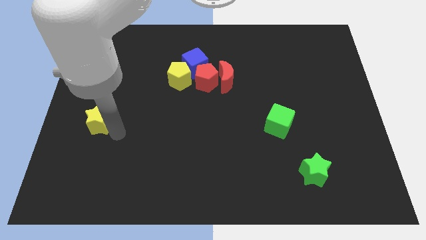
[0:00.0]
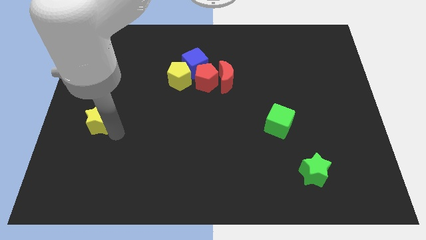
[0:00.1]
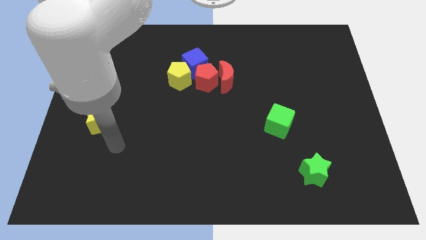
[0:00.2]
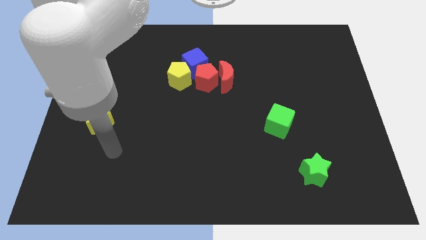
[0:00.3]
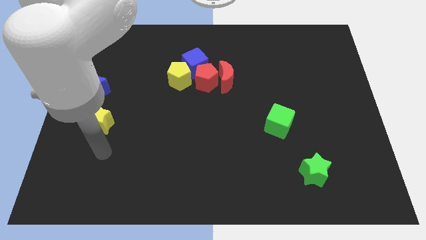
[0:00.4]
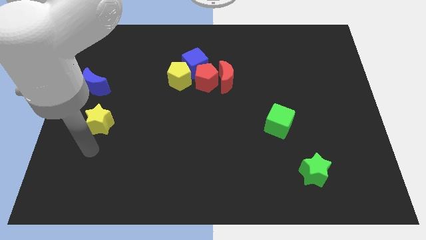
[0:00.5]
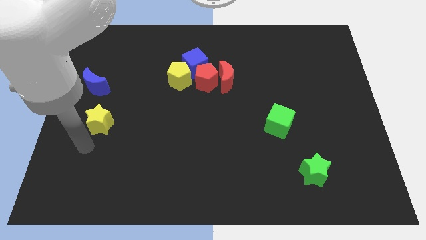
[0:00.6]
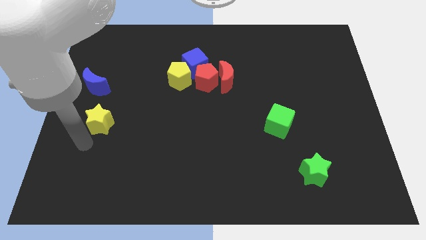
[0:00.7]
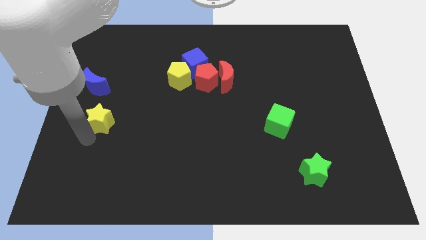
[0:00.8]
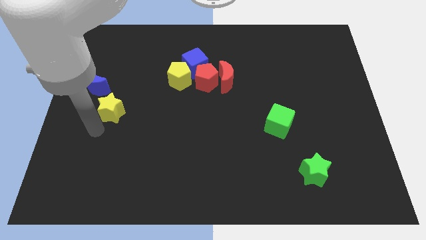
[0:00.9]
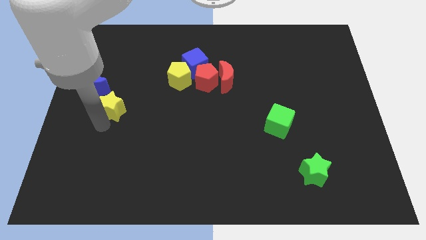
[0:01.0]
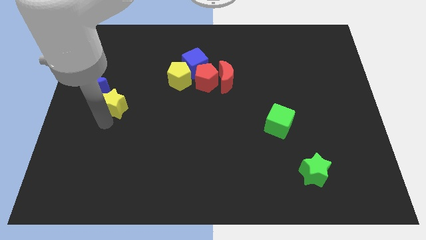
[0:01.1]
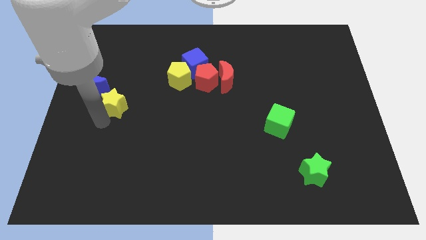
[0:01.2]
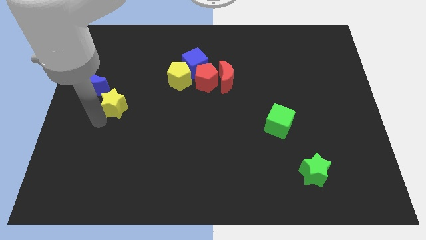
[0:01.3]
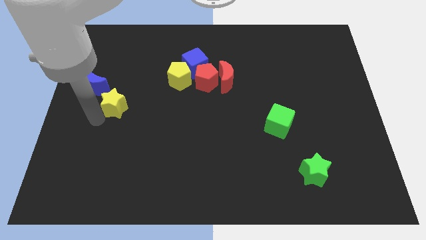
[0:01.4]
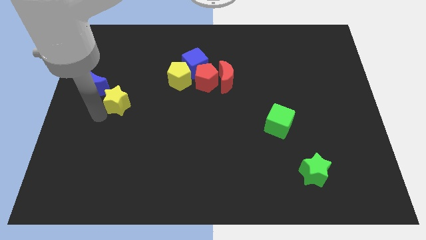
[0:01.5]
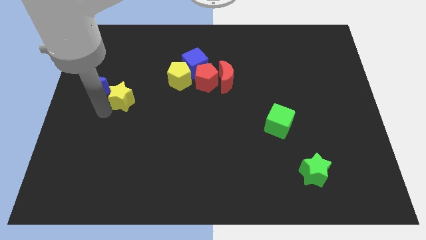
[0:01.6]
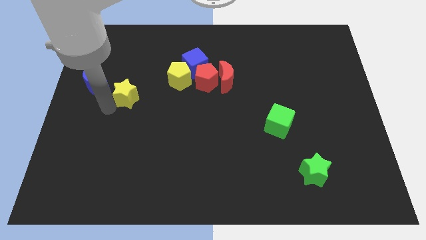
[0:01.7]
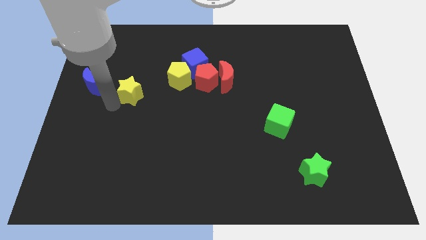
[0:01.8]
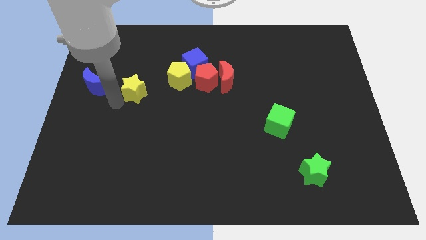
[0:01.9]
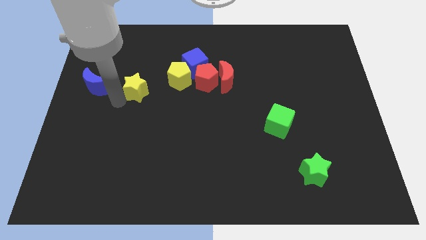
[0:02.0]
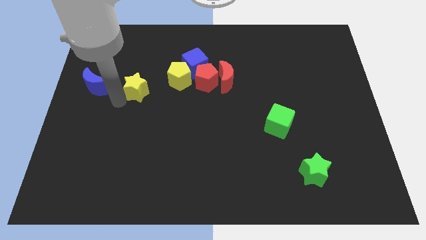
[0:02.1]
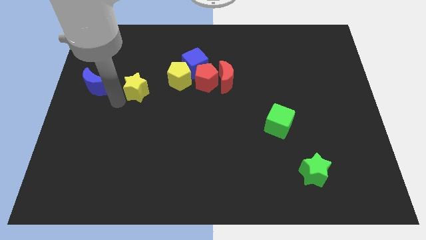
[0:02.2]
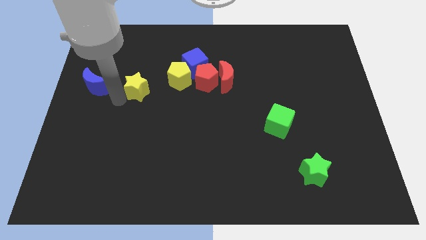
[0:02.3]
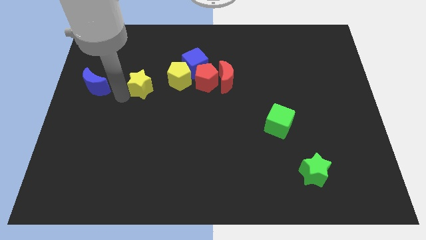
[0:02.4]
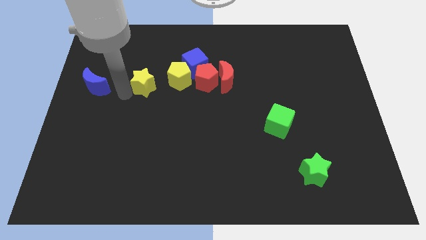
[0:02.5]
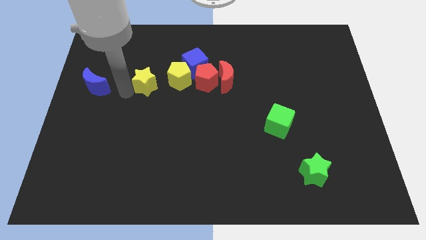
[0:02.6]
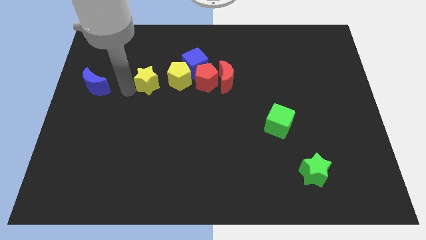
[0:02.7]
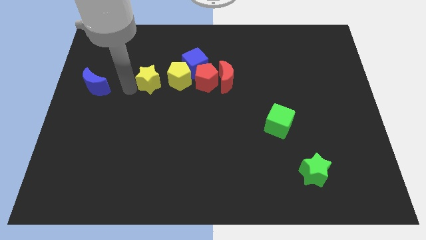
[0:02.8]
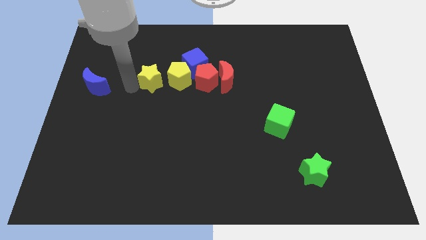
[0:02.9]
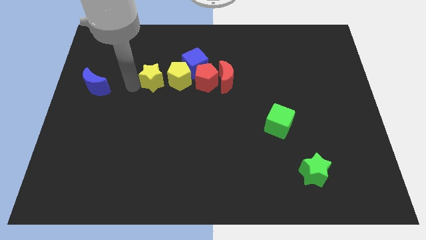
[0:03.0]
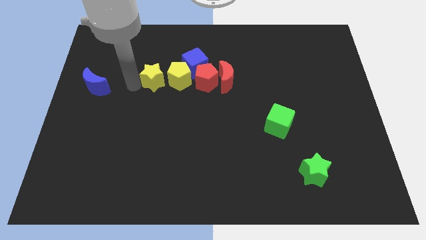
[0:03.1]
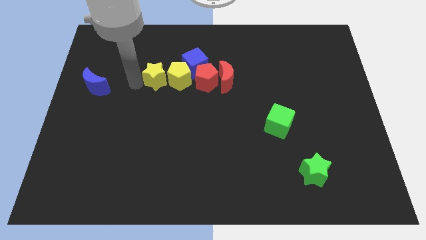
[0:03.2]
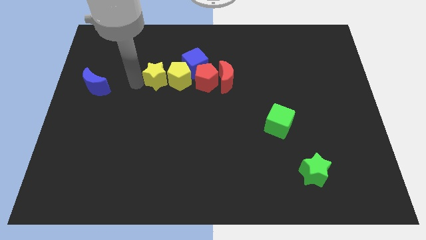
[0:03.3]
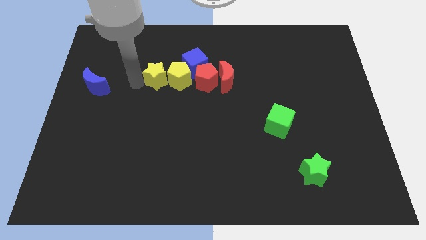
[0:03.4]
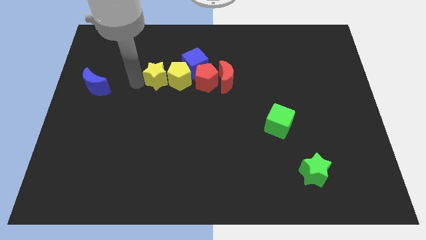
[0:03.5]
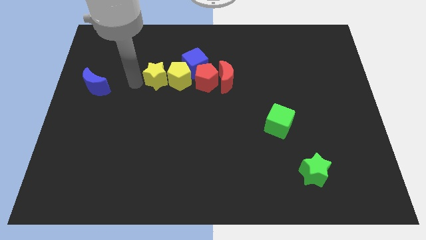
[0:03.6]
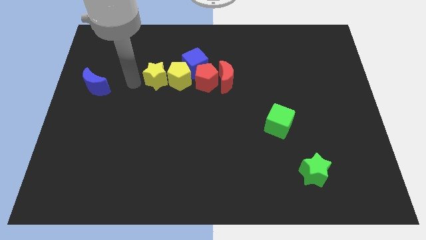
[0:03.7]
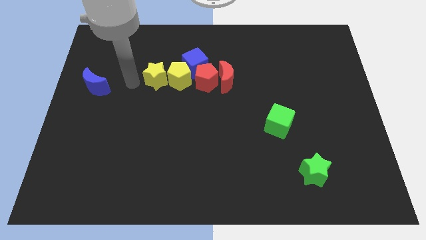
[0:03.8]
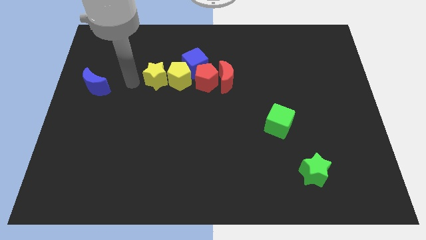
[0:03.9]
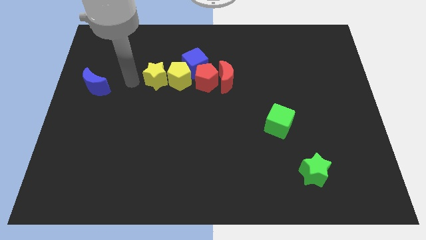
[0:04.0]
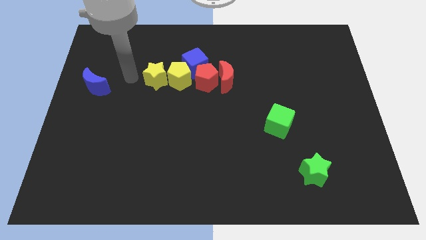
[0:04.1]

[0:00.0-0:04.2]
place the yellow star left to the yellow pentagon to form a horizontal line

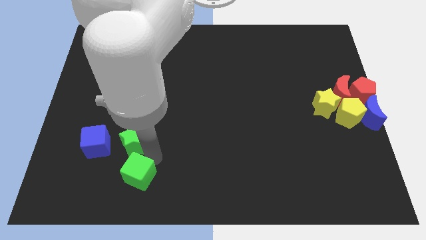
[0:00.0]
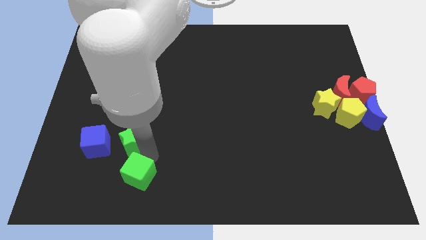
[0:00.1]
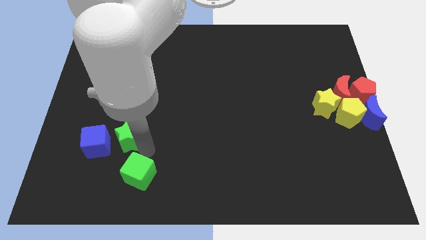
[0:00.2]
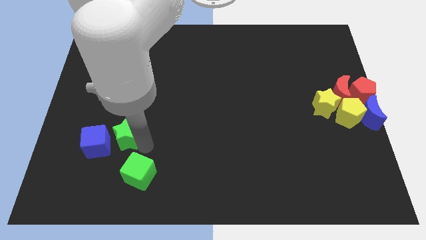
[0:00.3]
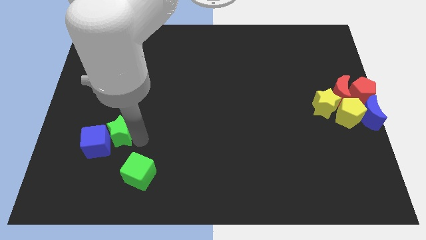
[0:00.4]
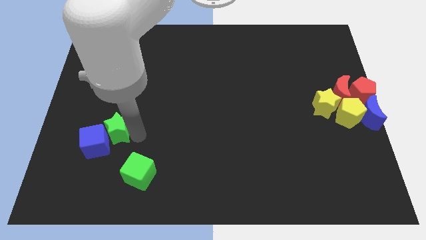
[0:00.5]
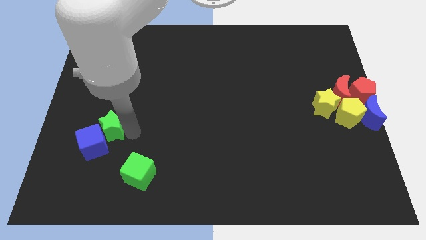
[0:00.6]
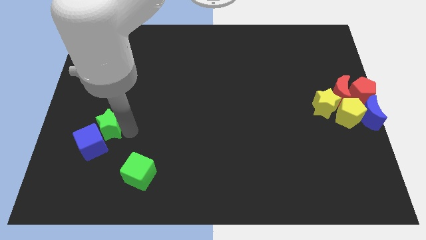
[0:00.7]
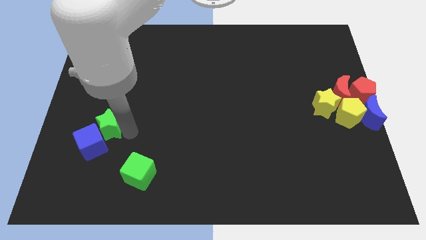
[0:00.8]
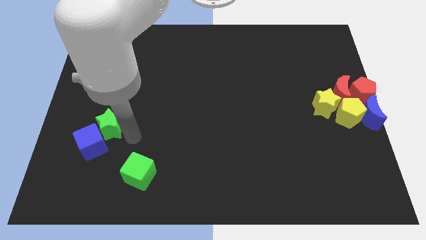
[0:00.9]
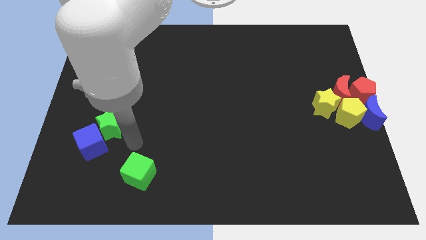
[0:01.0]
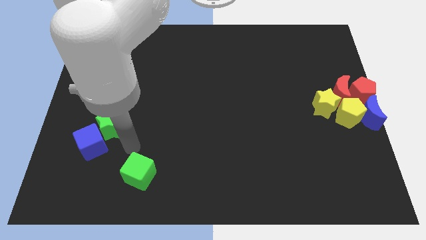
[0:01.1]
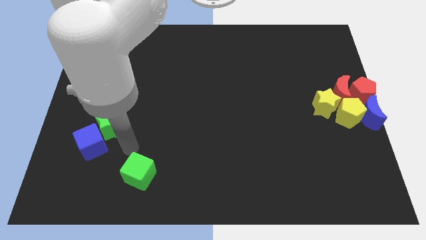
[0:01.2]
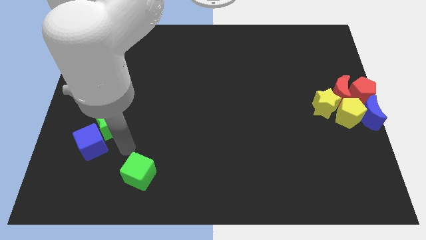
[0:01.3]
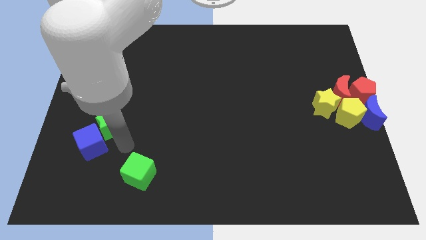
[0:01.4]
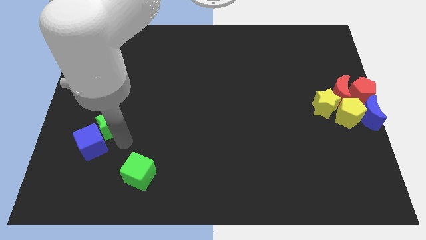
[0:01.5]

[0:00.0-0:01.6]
push the green star near to the blue cube

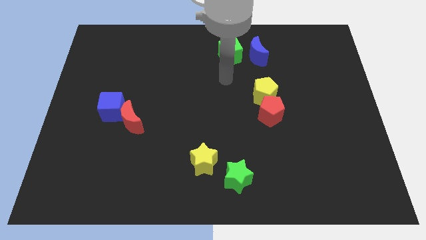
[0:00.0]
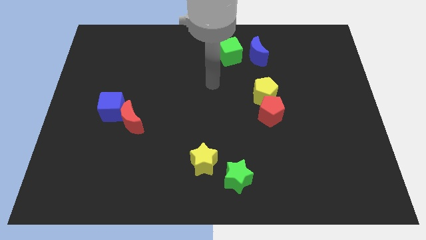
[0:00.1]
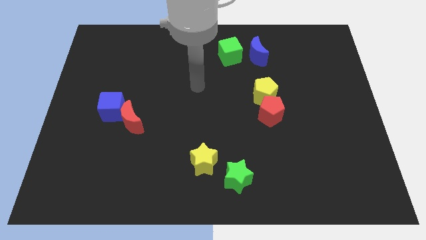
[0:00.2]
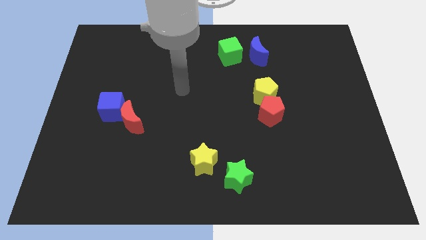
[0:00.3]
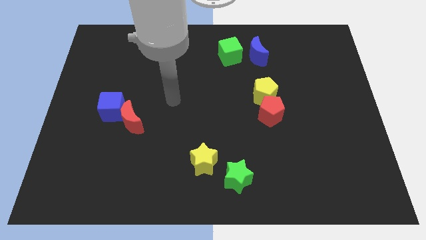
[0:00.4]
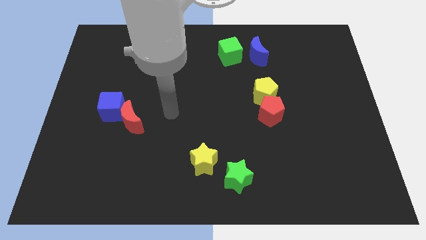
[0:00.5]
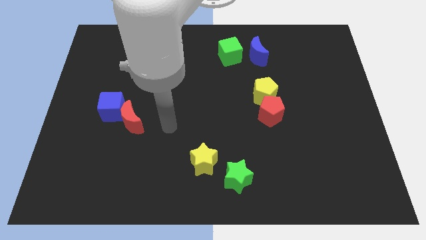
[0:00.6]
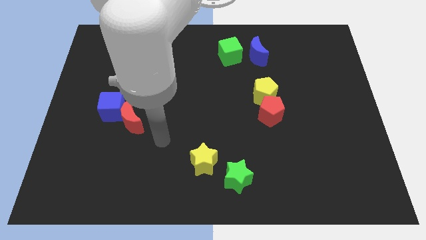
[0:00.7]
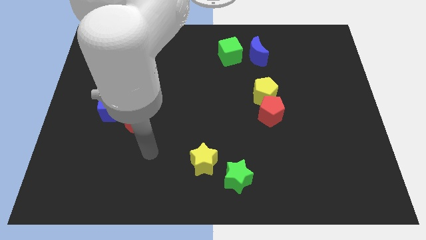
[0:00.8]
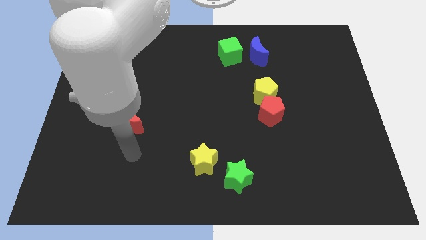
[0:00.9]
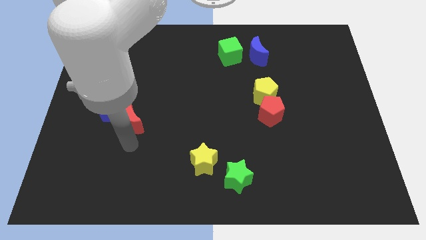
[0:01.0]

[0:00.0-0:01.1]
move your arm away from the green cube

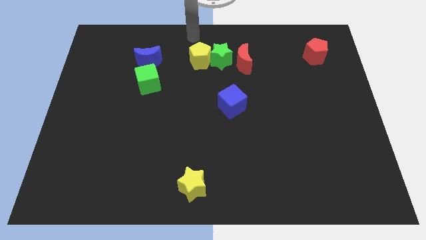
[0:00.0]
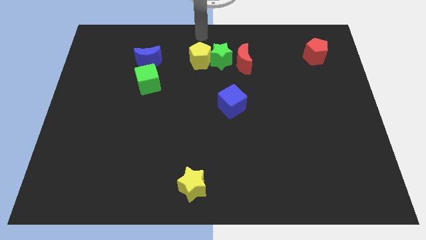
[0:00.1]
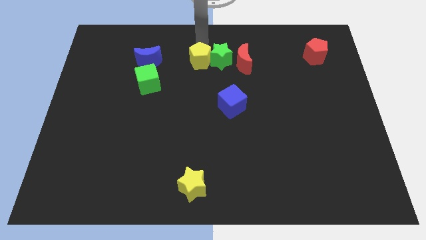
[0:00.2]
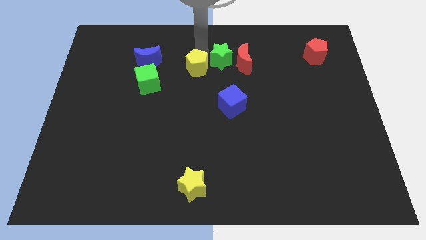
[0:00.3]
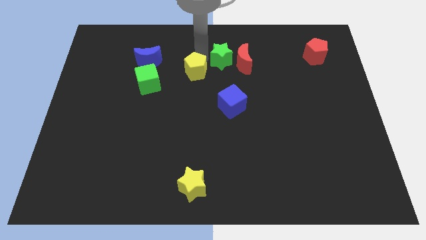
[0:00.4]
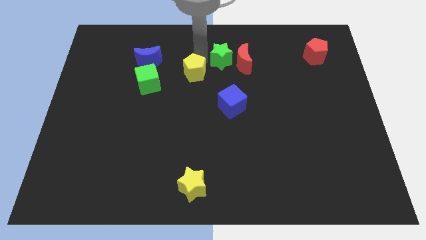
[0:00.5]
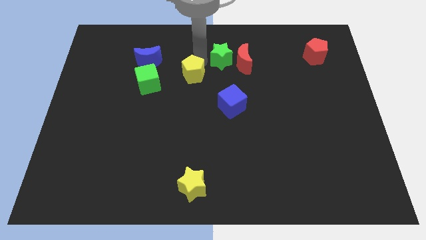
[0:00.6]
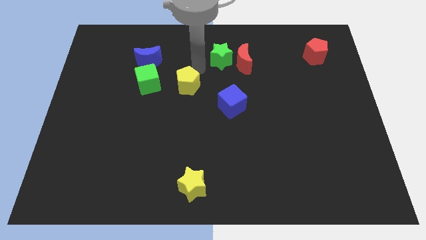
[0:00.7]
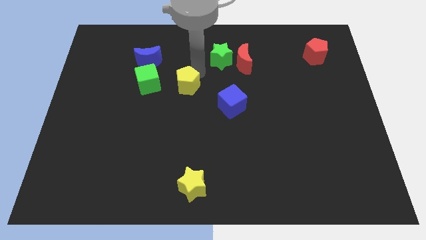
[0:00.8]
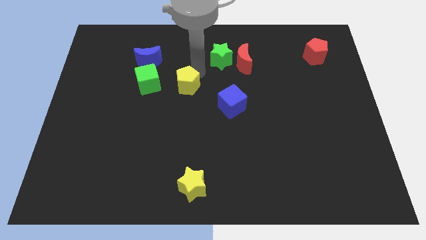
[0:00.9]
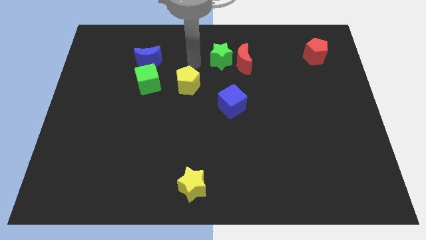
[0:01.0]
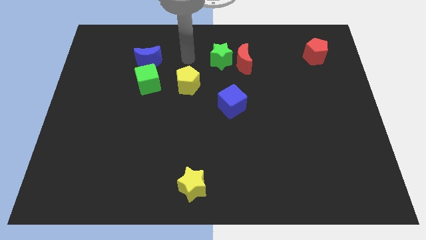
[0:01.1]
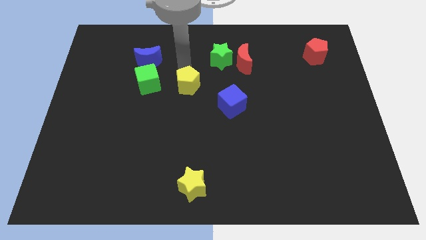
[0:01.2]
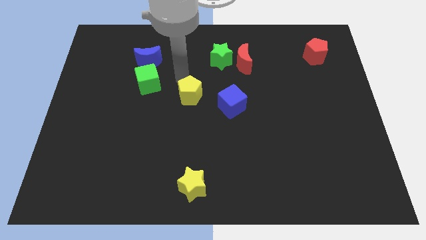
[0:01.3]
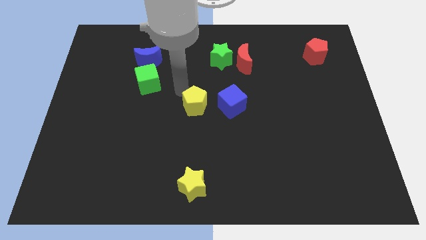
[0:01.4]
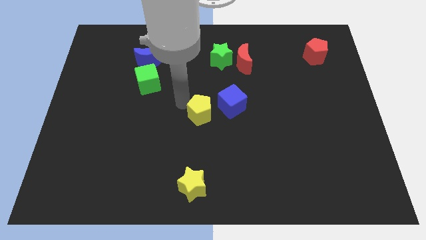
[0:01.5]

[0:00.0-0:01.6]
move yellow pentagon to the left of the blue cube

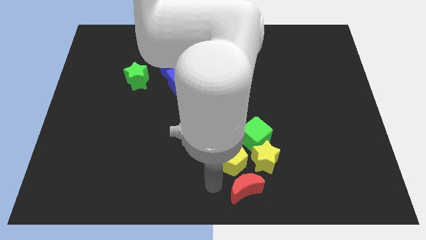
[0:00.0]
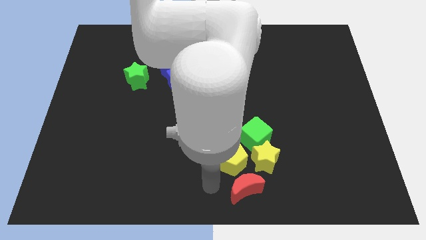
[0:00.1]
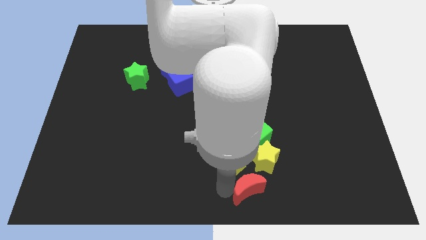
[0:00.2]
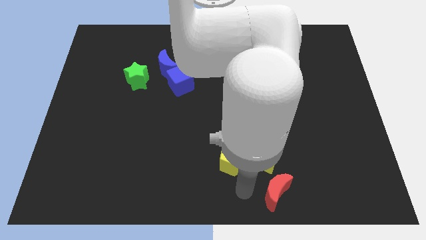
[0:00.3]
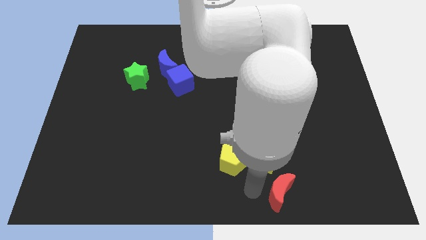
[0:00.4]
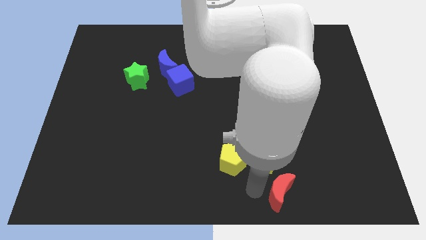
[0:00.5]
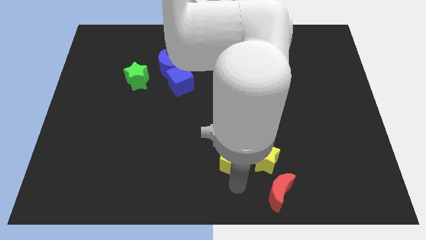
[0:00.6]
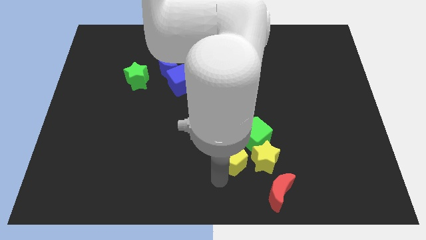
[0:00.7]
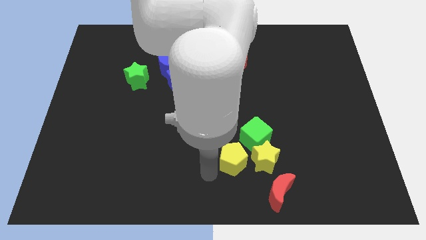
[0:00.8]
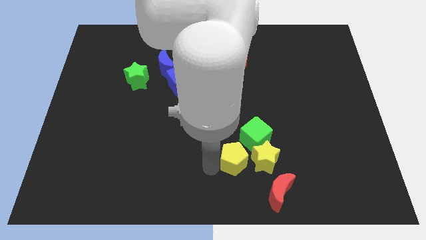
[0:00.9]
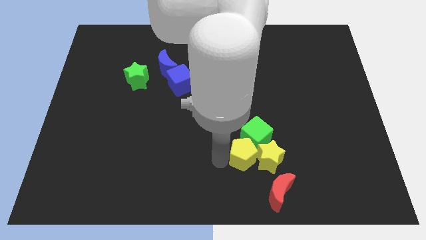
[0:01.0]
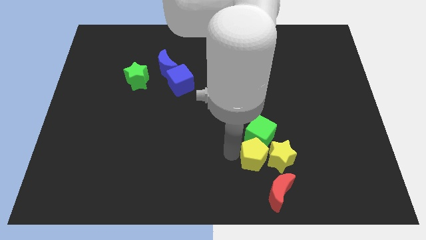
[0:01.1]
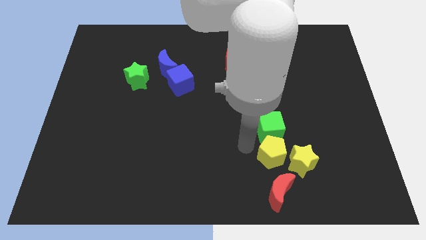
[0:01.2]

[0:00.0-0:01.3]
slightly push the yellow blocks towards the right
